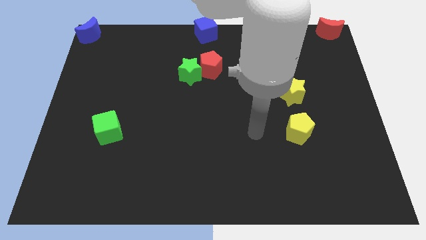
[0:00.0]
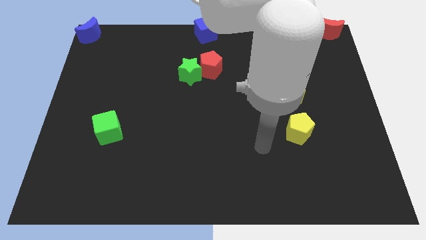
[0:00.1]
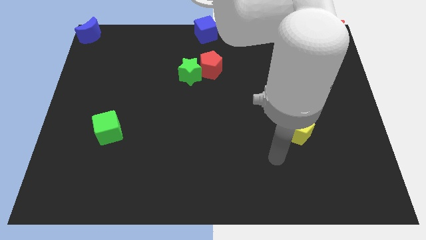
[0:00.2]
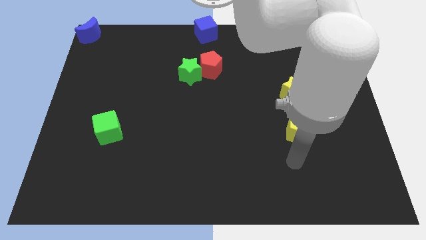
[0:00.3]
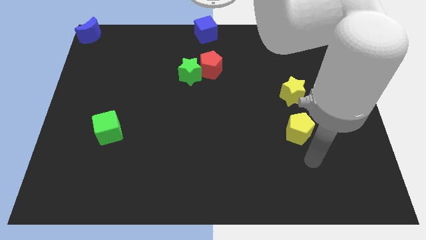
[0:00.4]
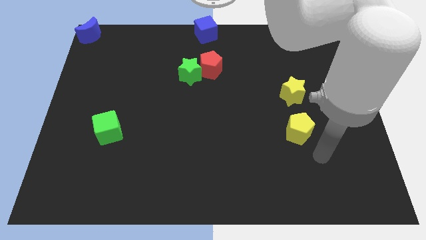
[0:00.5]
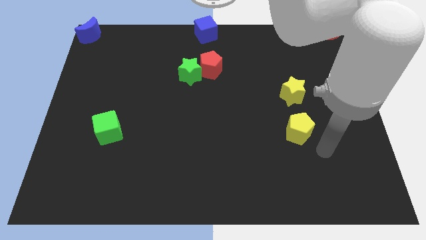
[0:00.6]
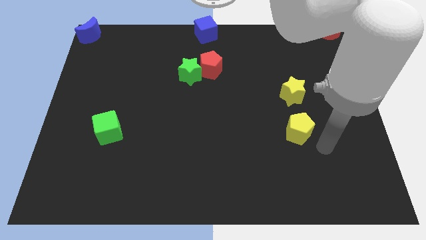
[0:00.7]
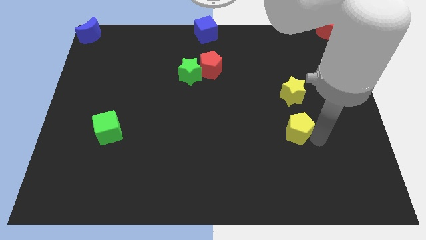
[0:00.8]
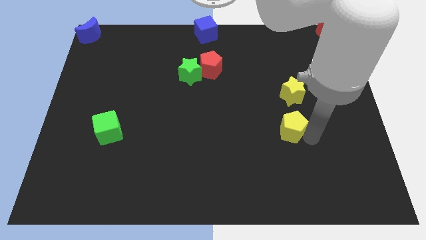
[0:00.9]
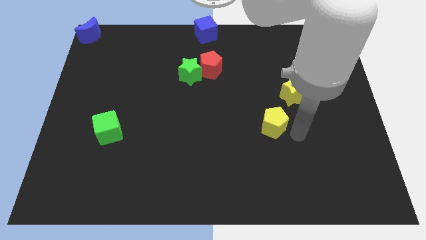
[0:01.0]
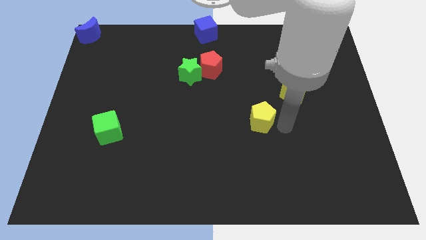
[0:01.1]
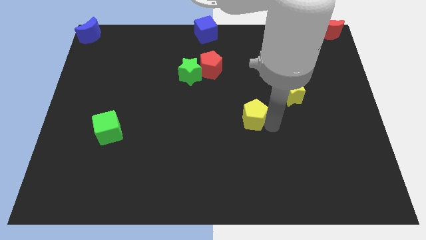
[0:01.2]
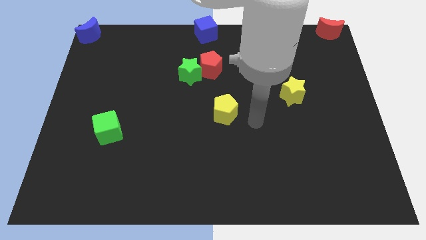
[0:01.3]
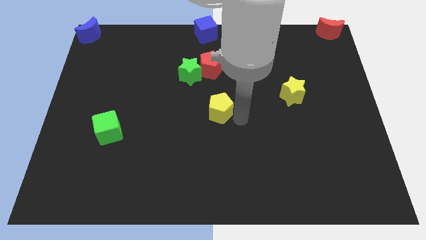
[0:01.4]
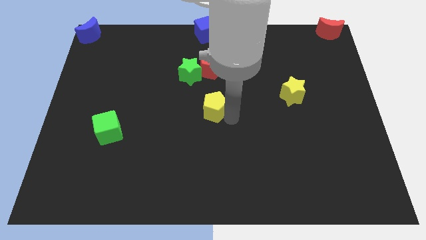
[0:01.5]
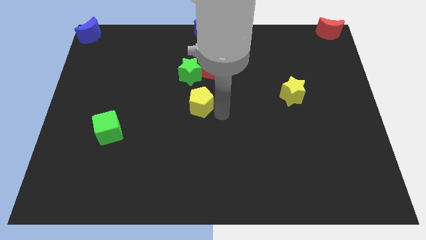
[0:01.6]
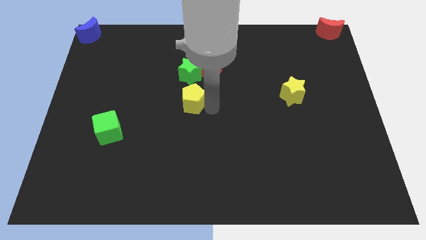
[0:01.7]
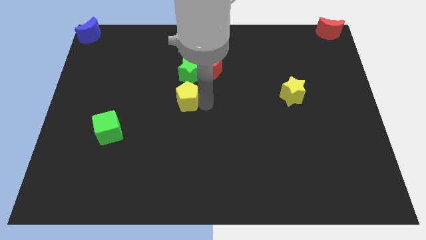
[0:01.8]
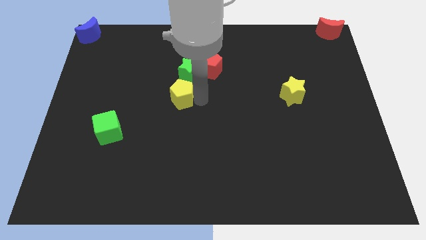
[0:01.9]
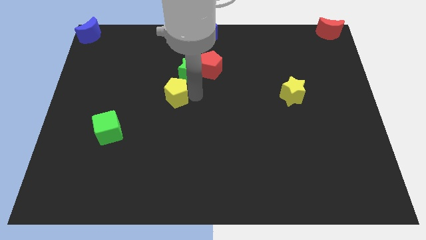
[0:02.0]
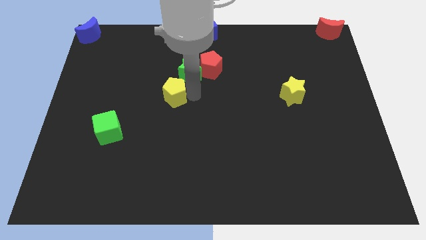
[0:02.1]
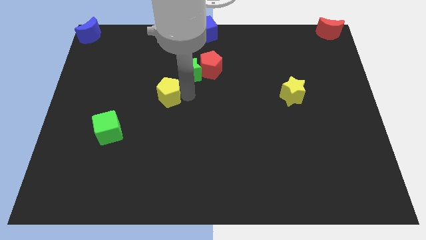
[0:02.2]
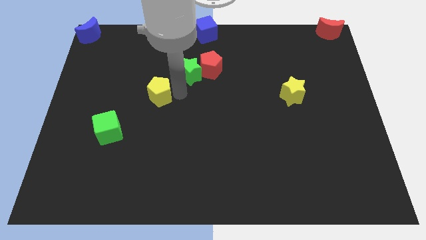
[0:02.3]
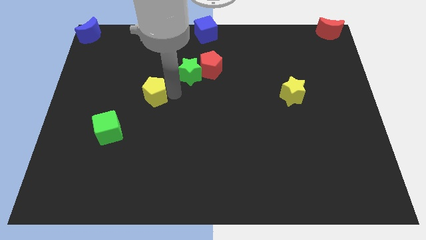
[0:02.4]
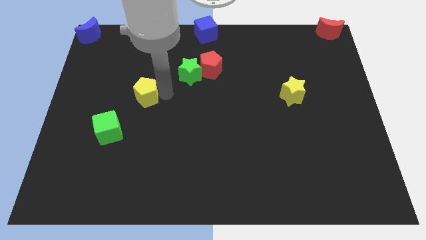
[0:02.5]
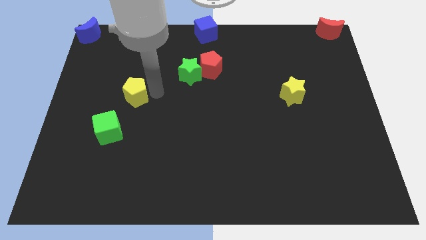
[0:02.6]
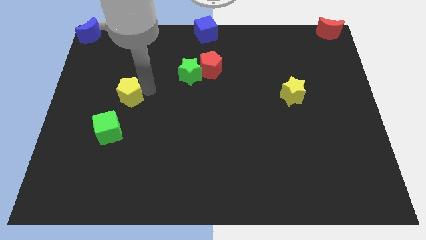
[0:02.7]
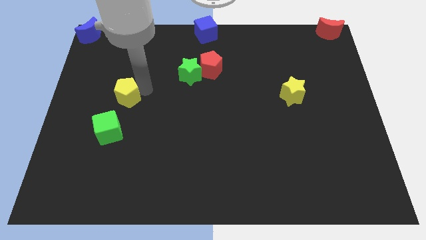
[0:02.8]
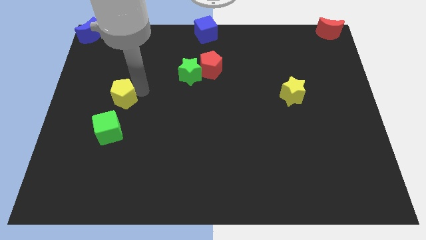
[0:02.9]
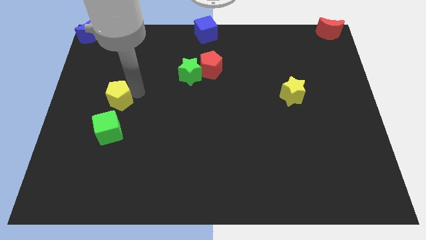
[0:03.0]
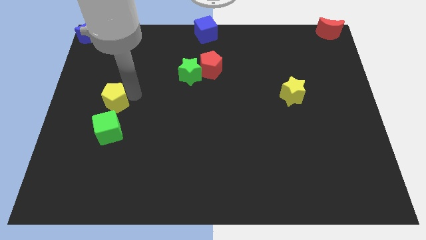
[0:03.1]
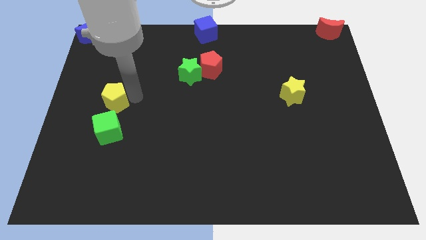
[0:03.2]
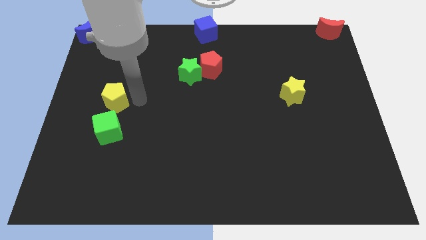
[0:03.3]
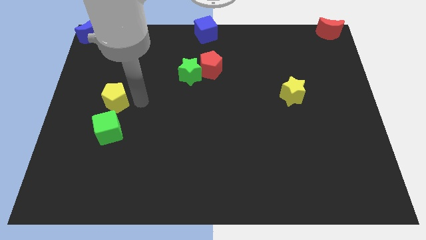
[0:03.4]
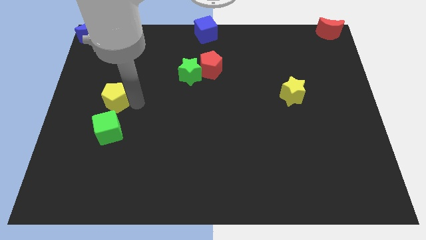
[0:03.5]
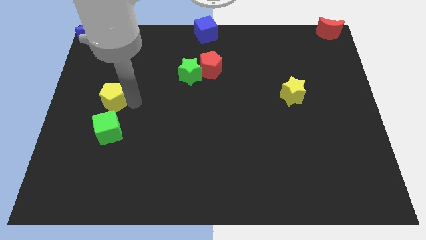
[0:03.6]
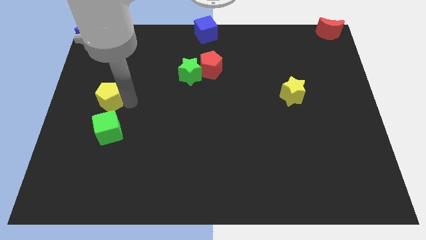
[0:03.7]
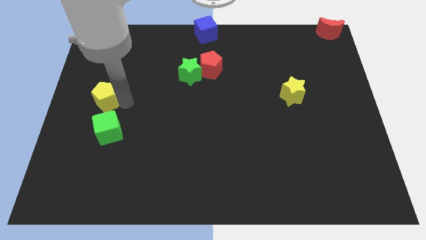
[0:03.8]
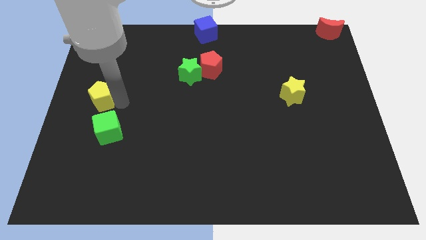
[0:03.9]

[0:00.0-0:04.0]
move the yellow pentagon to the top of the green cube

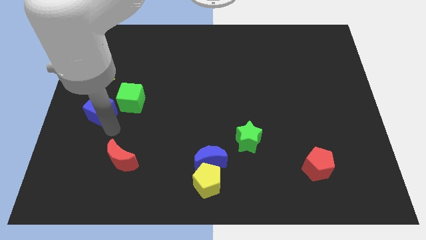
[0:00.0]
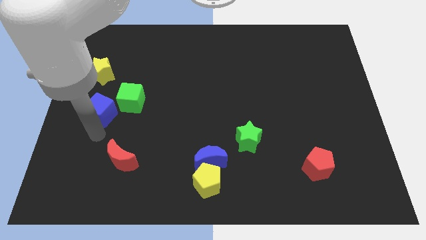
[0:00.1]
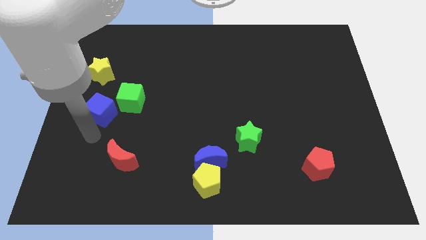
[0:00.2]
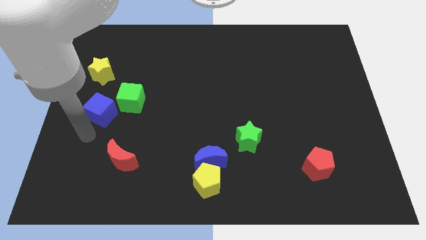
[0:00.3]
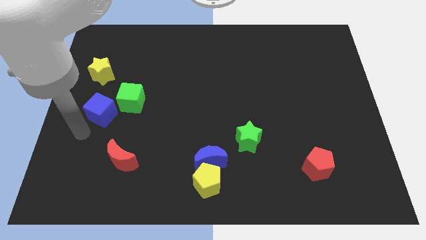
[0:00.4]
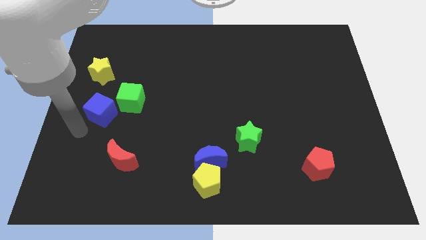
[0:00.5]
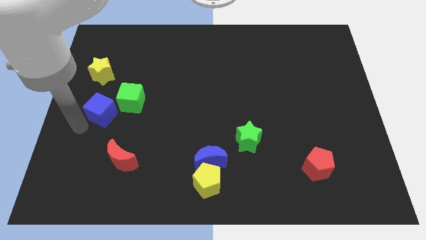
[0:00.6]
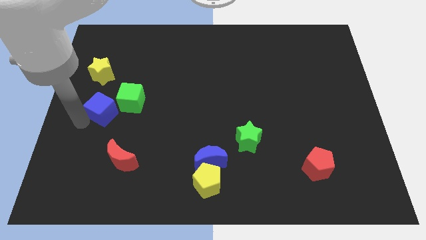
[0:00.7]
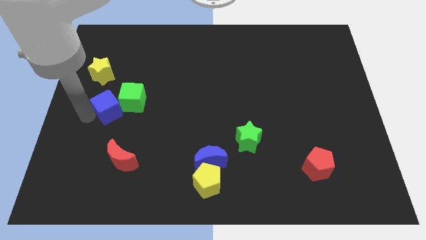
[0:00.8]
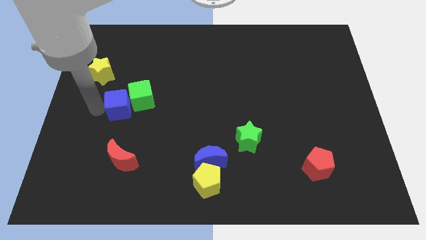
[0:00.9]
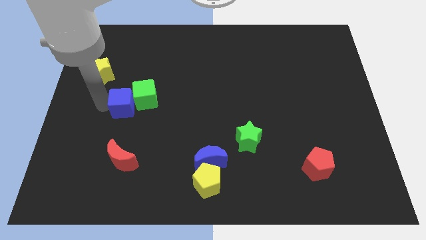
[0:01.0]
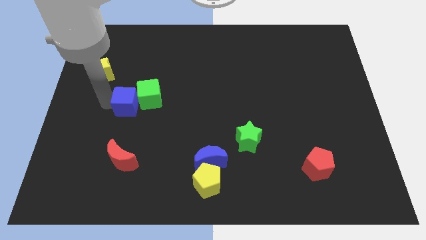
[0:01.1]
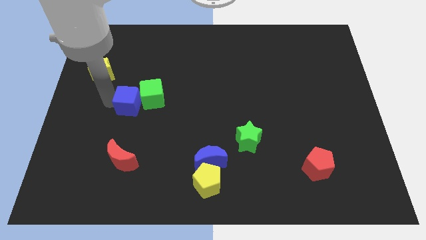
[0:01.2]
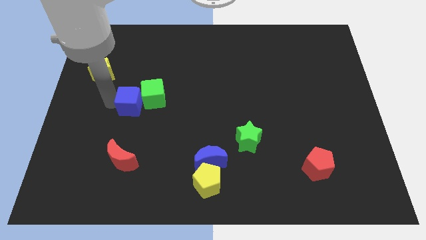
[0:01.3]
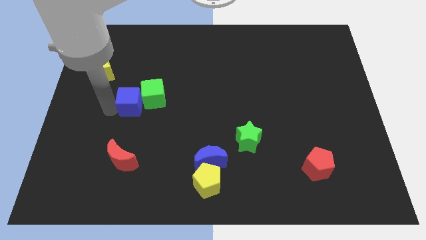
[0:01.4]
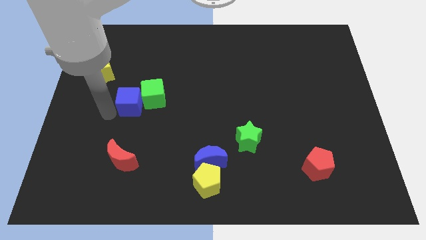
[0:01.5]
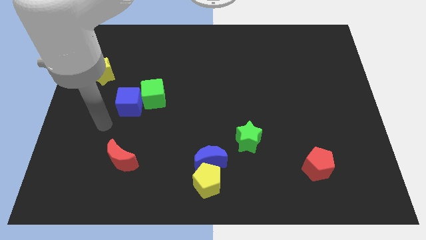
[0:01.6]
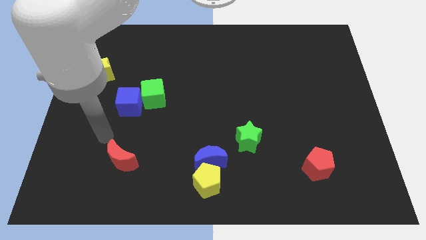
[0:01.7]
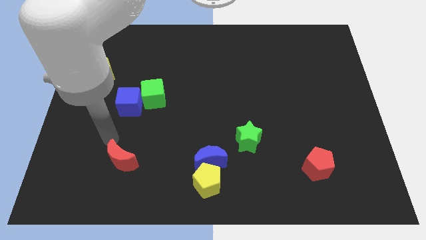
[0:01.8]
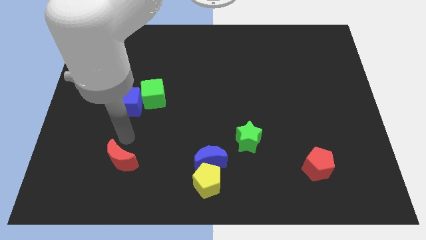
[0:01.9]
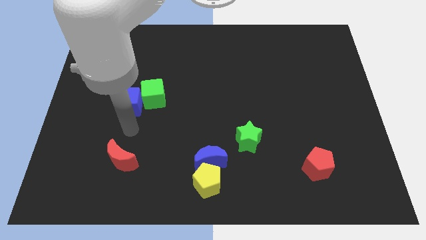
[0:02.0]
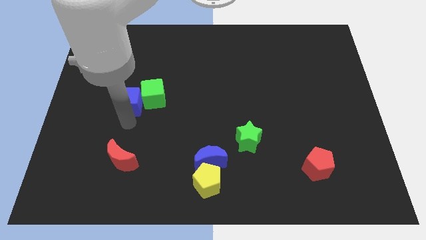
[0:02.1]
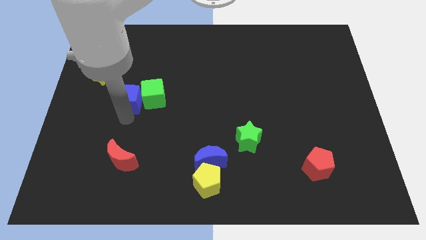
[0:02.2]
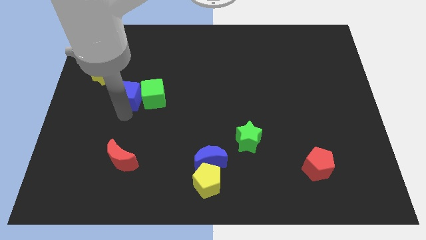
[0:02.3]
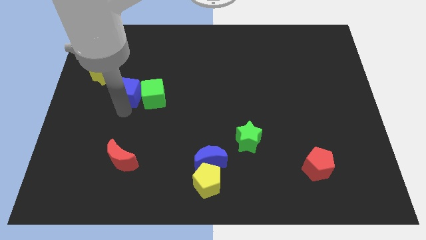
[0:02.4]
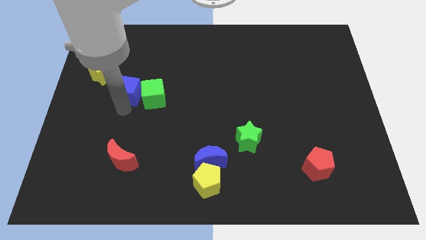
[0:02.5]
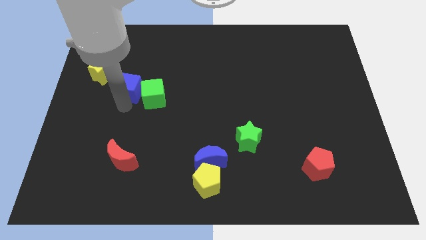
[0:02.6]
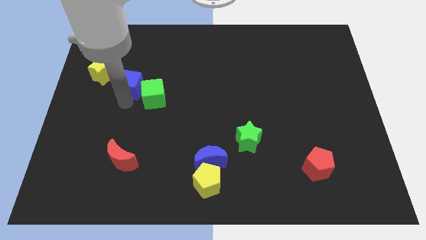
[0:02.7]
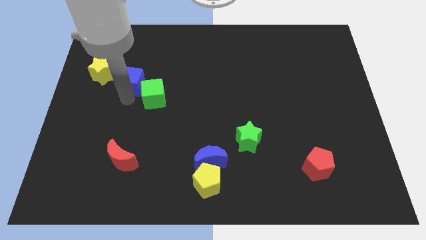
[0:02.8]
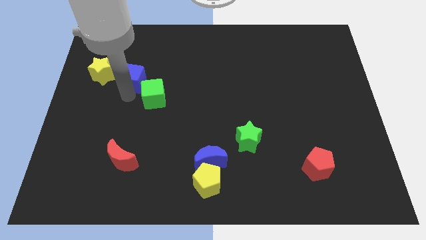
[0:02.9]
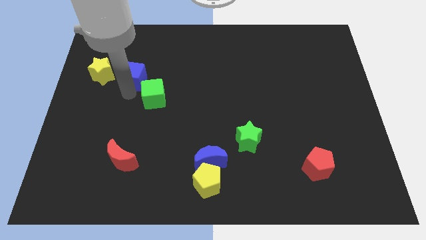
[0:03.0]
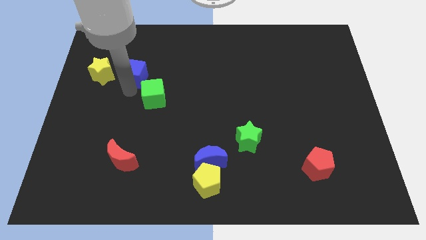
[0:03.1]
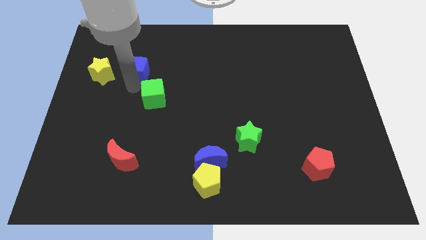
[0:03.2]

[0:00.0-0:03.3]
push the blue cube to the top of the green cube

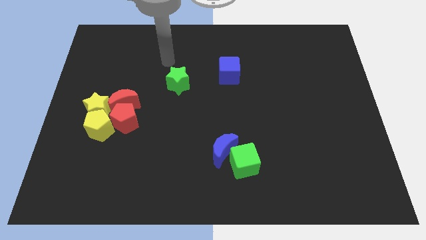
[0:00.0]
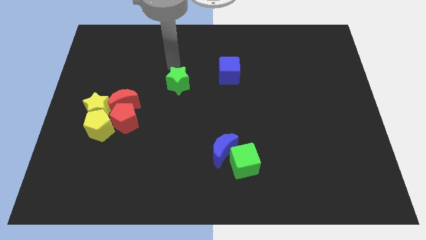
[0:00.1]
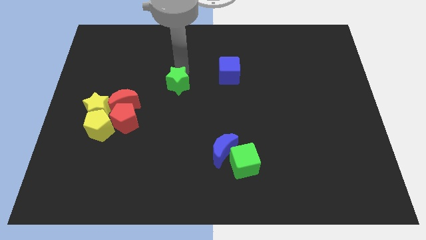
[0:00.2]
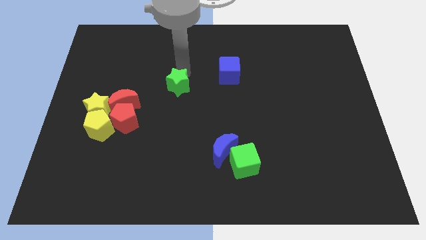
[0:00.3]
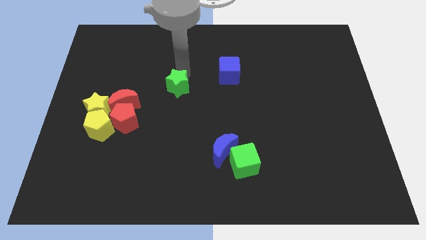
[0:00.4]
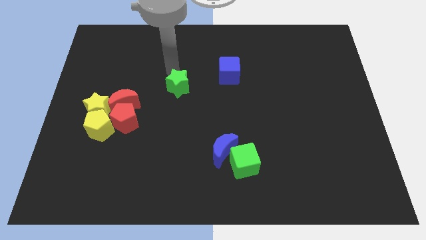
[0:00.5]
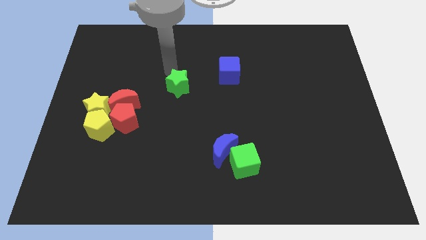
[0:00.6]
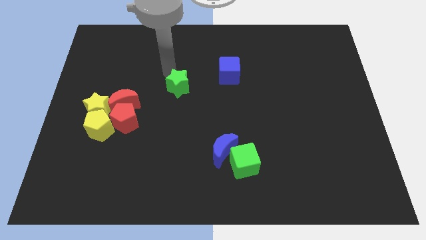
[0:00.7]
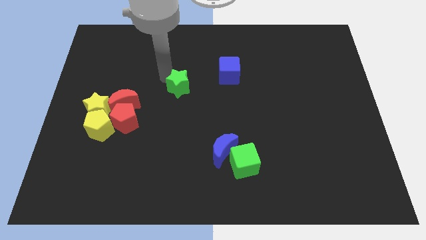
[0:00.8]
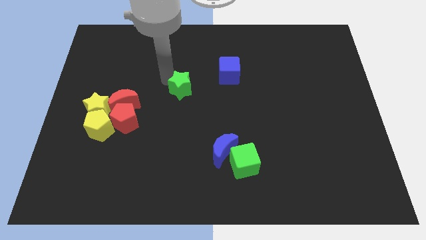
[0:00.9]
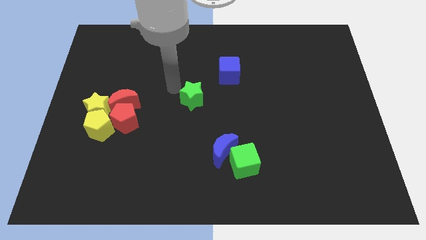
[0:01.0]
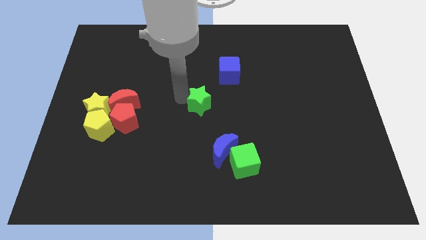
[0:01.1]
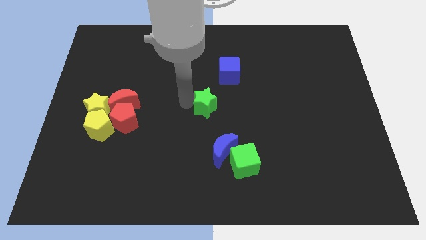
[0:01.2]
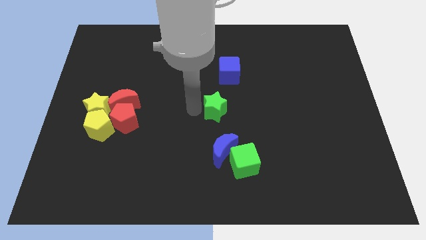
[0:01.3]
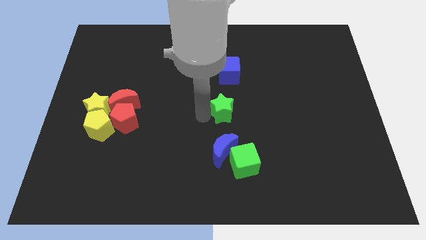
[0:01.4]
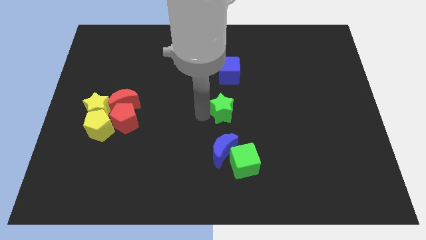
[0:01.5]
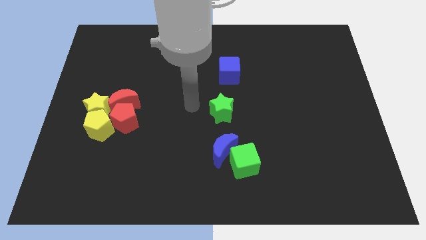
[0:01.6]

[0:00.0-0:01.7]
place the green star in between the blue cube and blue moon
